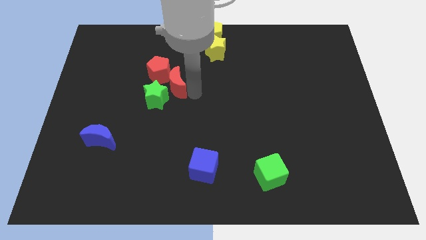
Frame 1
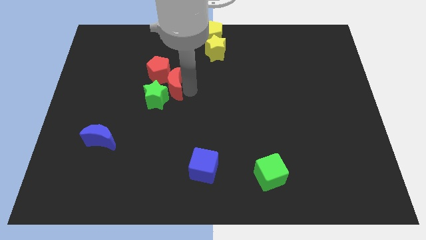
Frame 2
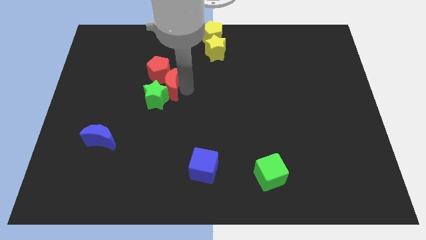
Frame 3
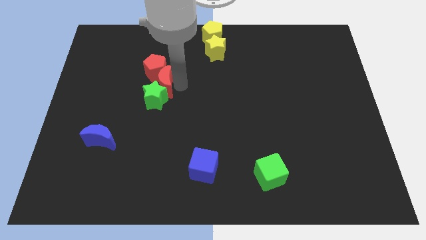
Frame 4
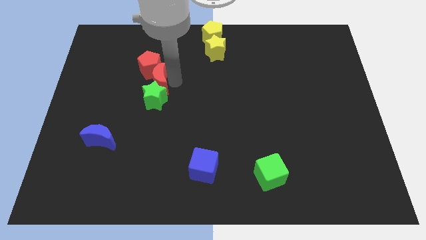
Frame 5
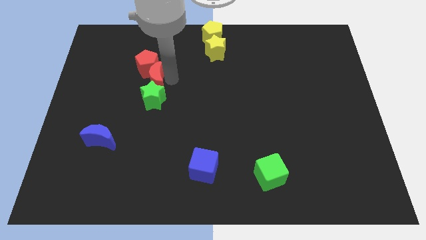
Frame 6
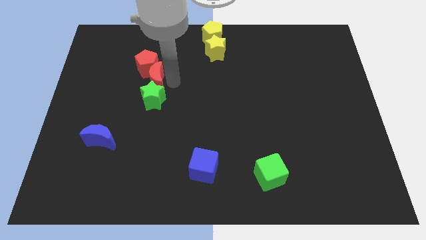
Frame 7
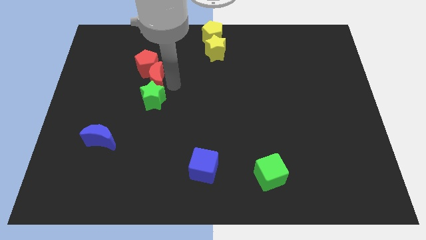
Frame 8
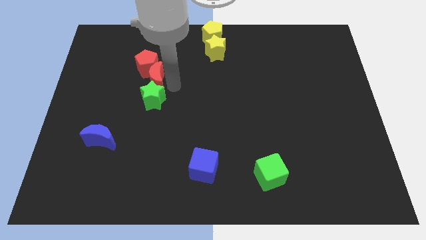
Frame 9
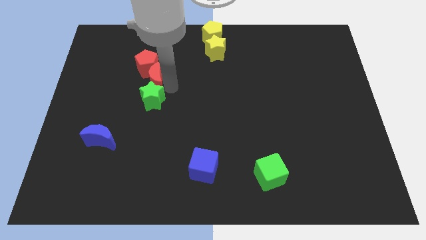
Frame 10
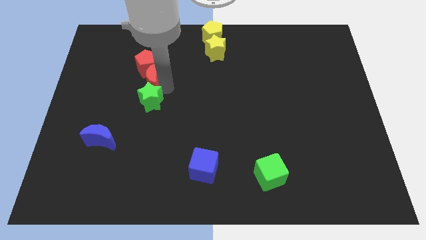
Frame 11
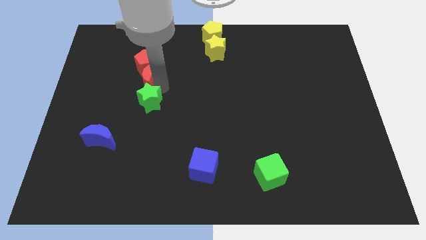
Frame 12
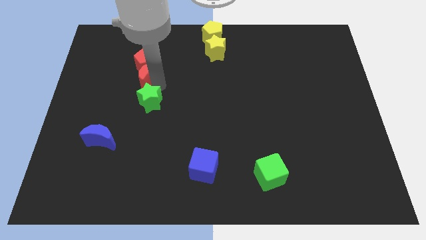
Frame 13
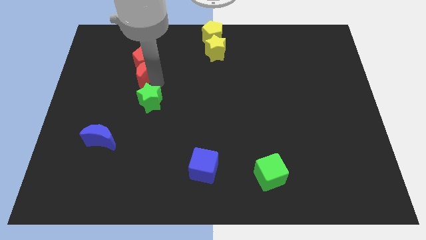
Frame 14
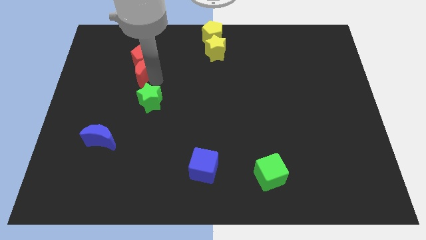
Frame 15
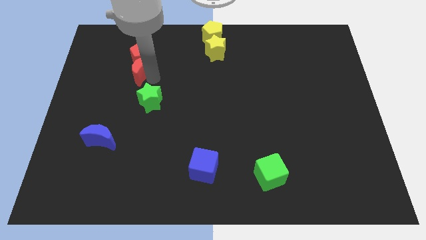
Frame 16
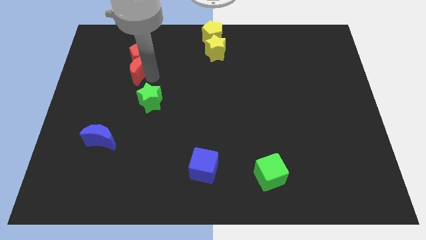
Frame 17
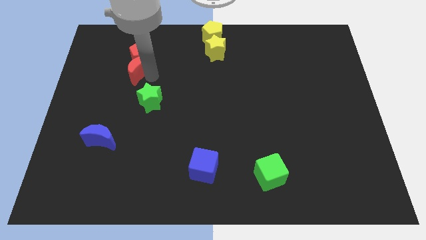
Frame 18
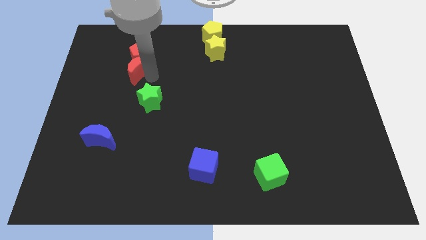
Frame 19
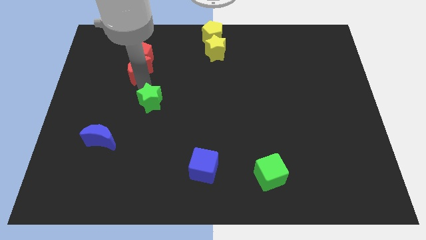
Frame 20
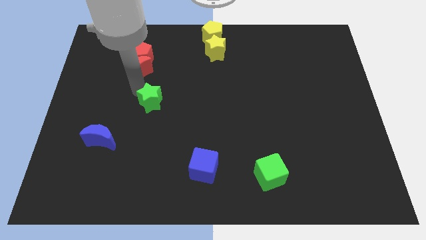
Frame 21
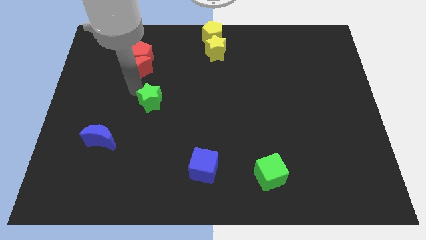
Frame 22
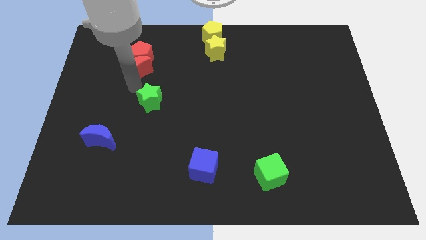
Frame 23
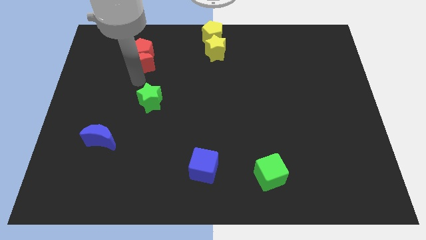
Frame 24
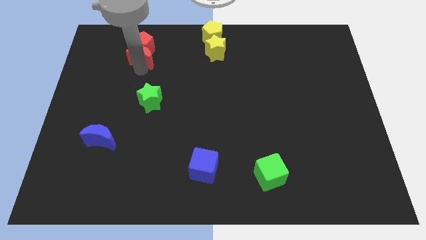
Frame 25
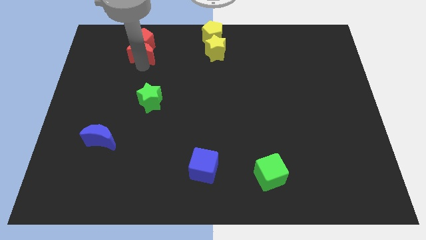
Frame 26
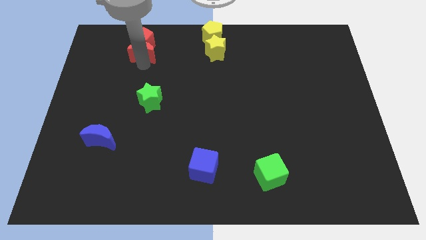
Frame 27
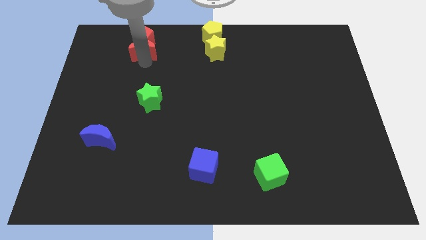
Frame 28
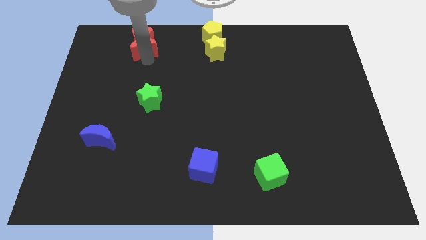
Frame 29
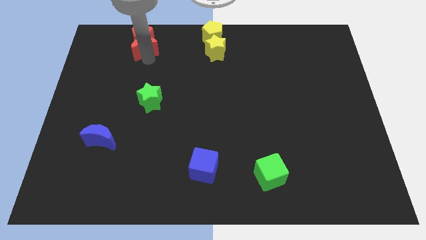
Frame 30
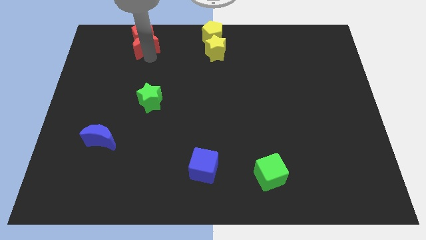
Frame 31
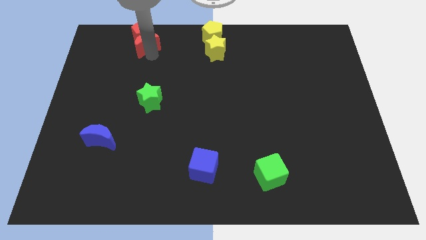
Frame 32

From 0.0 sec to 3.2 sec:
put the group of red blocks to the left of the group of yellow blocks

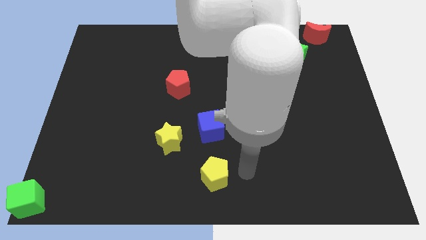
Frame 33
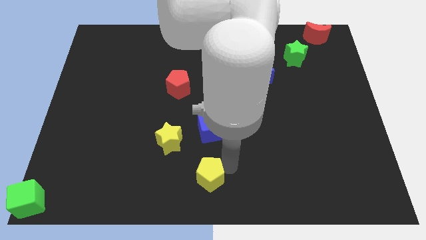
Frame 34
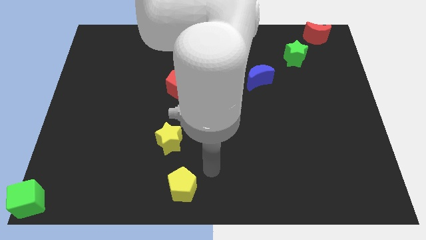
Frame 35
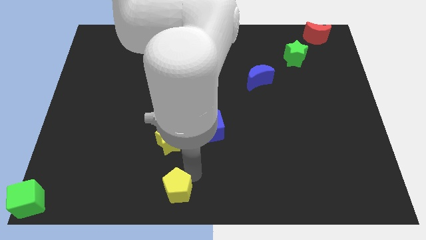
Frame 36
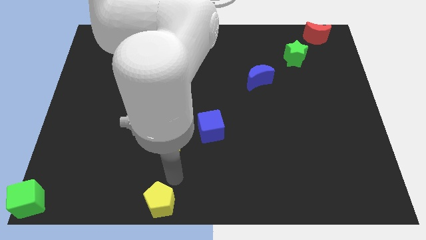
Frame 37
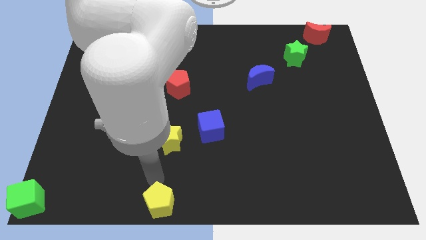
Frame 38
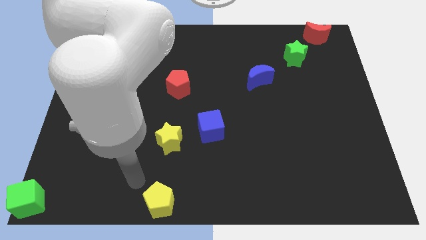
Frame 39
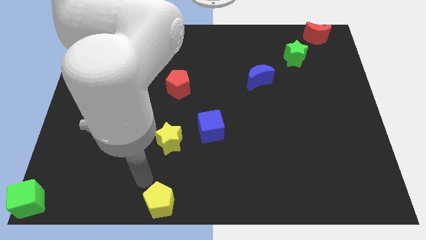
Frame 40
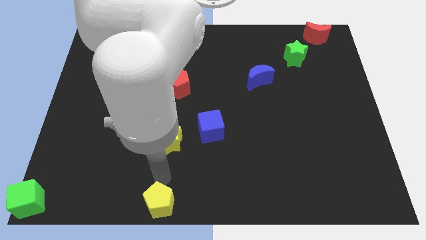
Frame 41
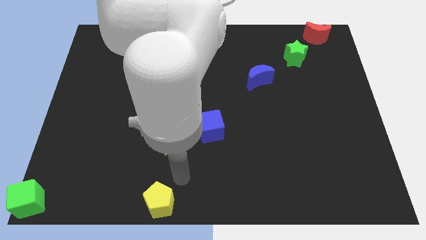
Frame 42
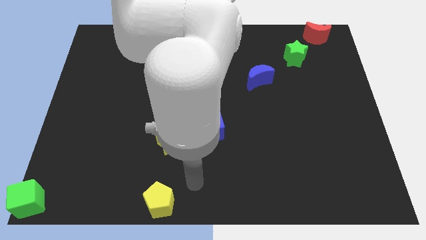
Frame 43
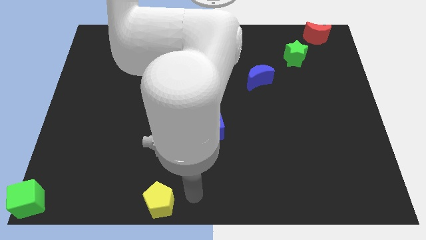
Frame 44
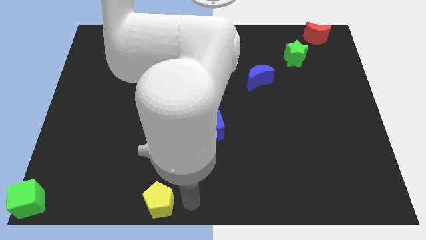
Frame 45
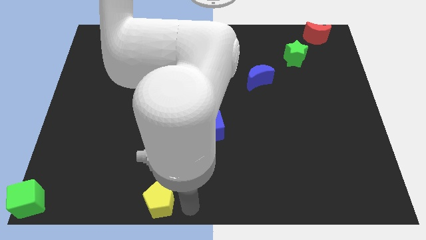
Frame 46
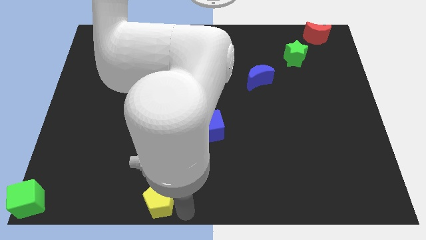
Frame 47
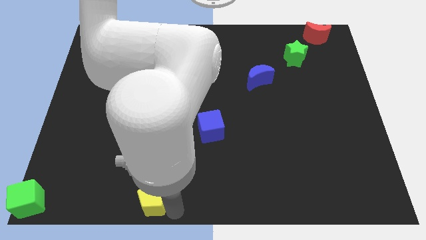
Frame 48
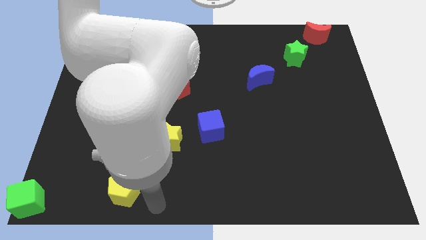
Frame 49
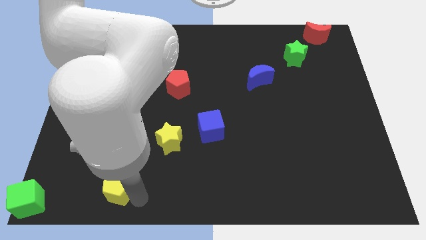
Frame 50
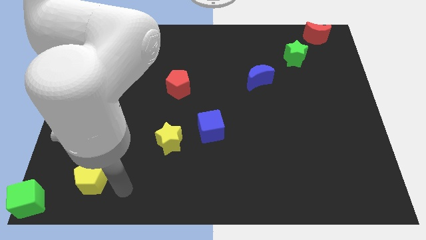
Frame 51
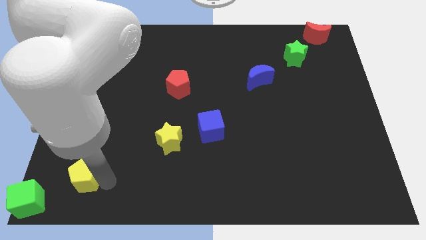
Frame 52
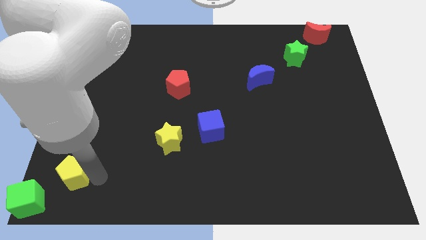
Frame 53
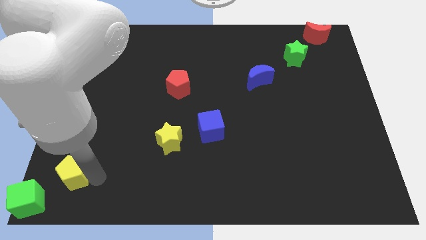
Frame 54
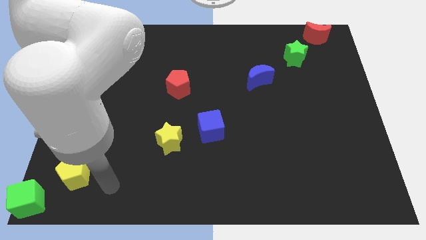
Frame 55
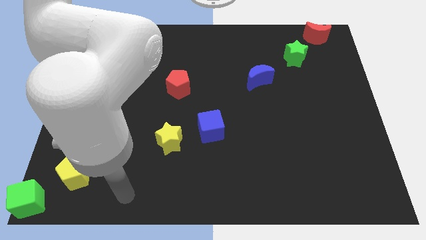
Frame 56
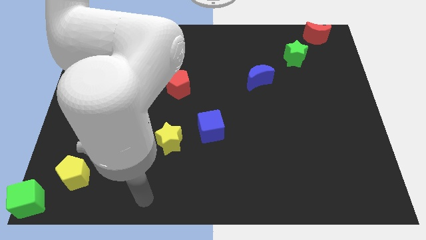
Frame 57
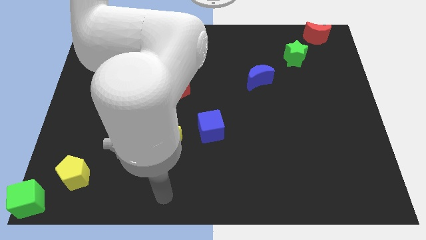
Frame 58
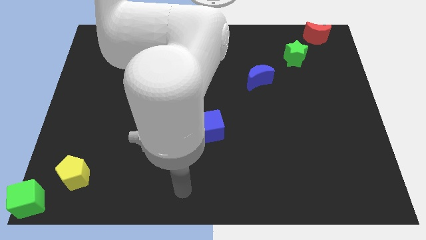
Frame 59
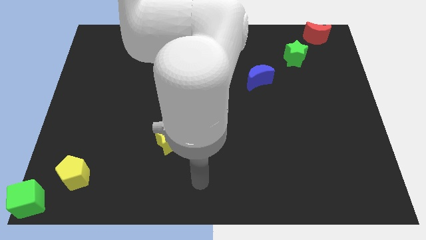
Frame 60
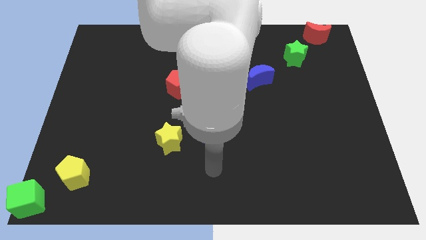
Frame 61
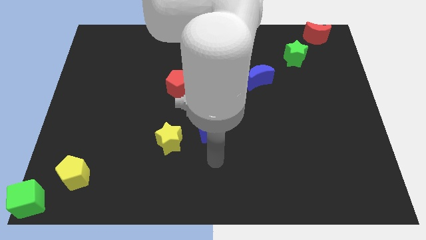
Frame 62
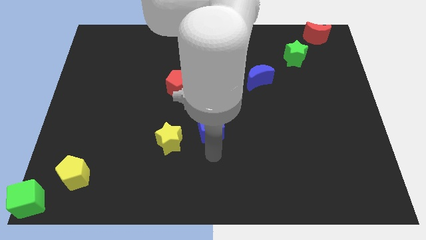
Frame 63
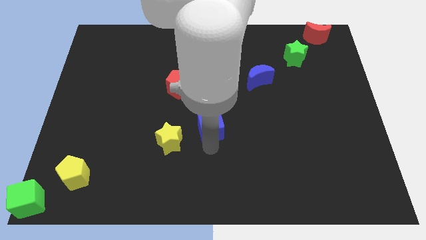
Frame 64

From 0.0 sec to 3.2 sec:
push the yellow pentagon diagonally on the top right side of the green cube

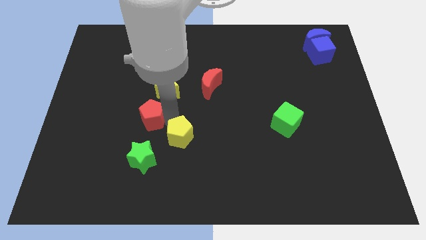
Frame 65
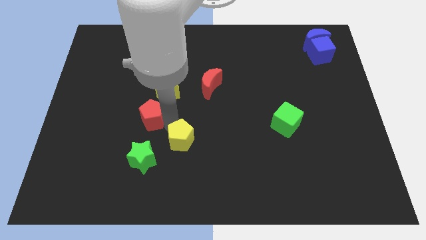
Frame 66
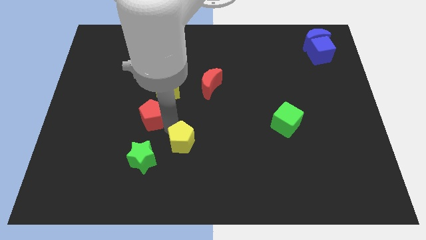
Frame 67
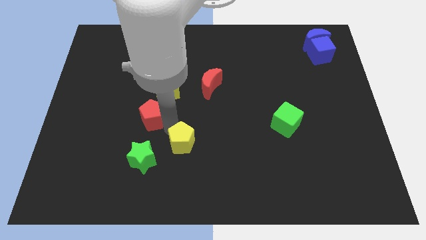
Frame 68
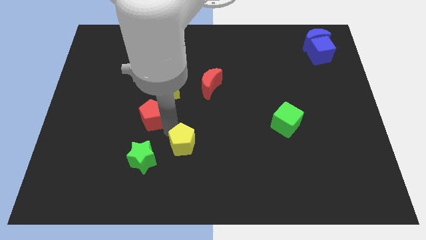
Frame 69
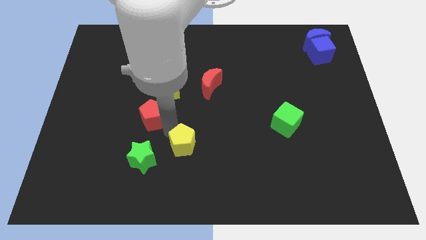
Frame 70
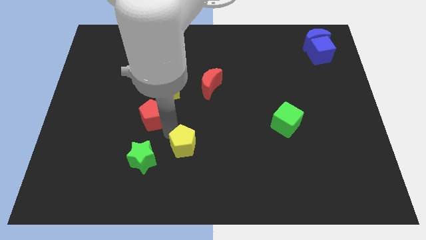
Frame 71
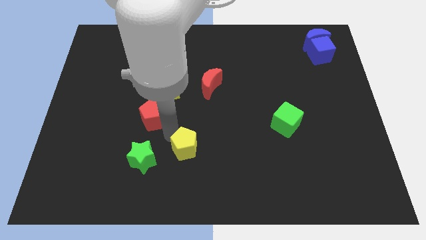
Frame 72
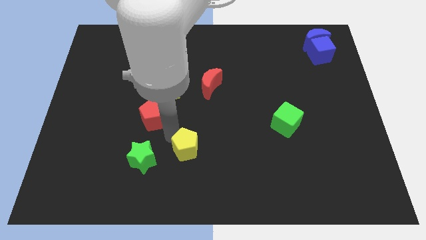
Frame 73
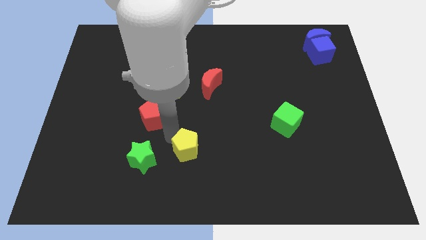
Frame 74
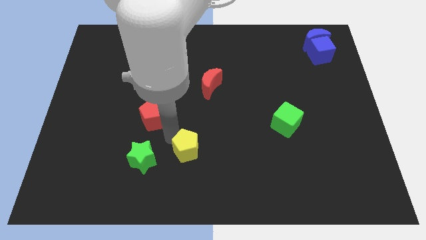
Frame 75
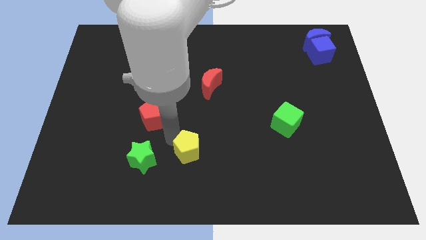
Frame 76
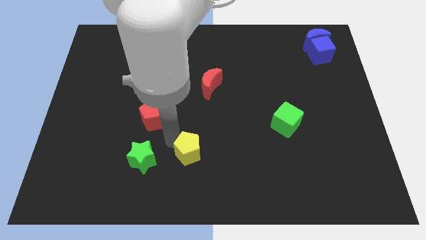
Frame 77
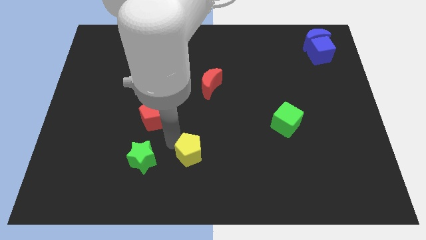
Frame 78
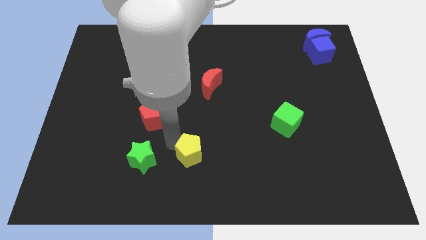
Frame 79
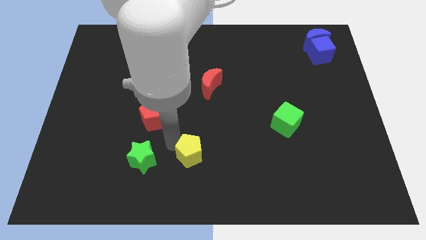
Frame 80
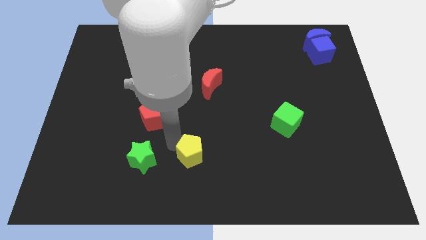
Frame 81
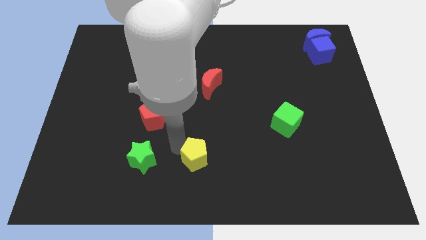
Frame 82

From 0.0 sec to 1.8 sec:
move the yellow pentagon to the right of the green star

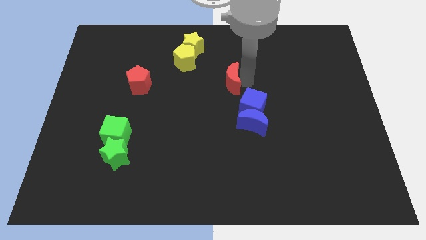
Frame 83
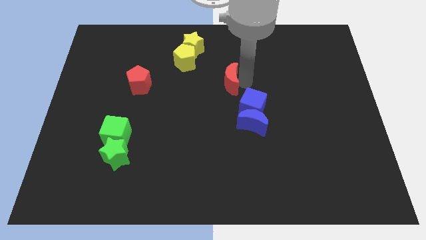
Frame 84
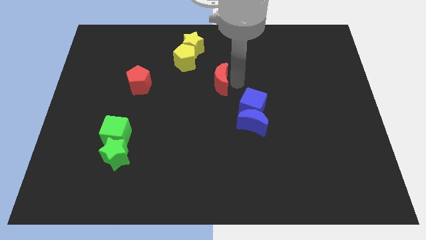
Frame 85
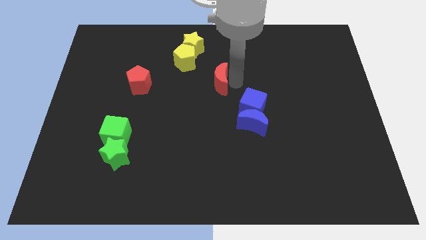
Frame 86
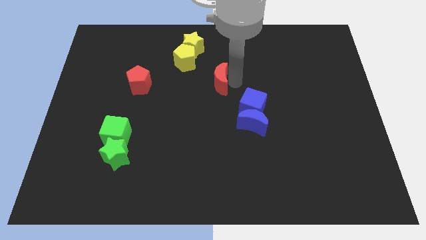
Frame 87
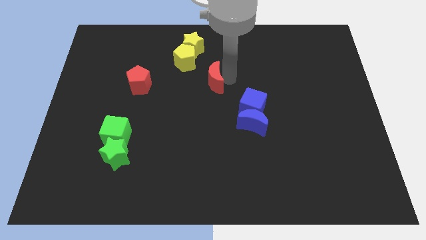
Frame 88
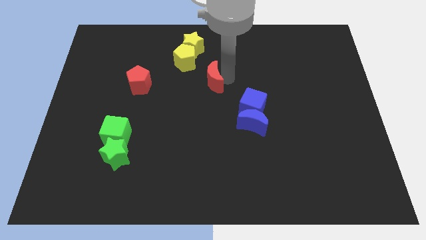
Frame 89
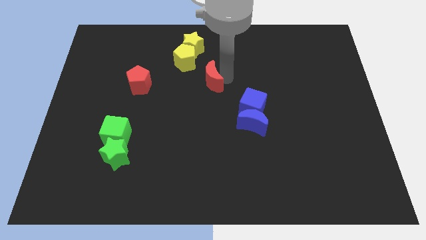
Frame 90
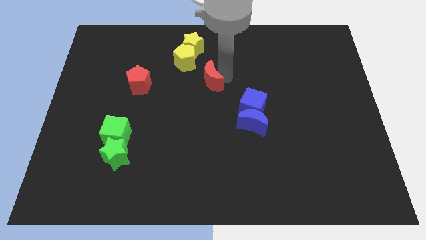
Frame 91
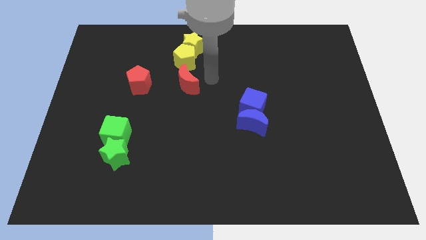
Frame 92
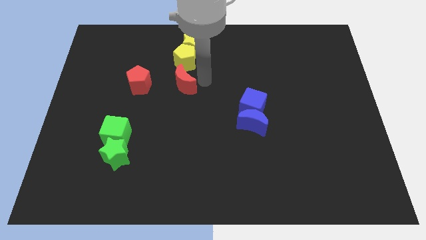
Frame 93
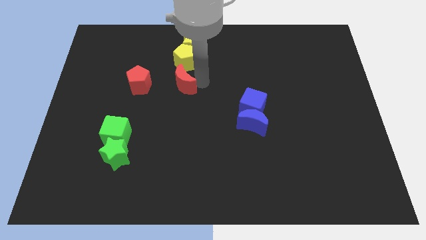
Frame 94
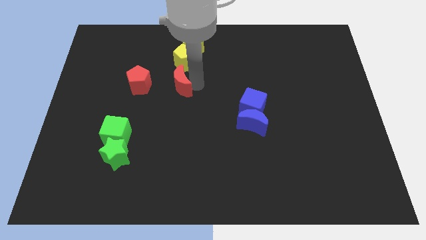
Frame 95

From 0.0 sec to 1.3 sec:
put the red crescent below the yellow pentagon
